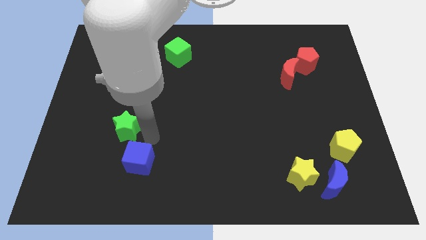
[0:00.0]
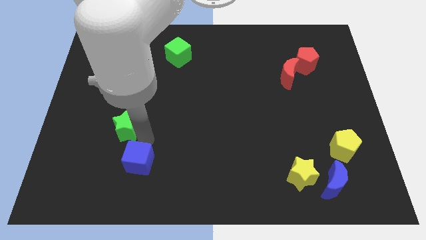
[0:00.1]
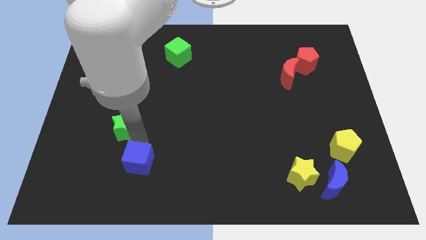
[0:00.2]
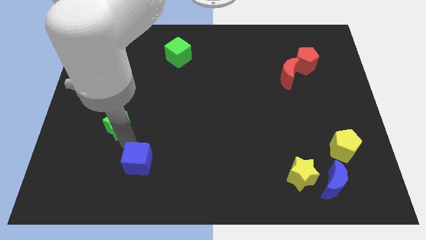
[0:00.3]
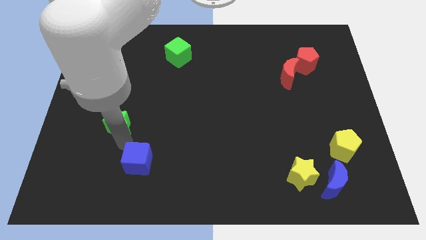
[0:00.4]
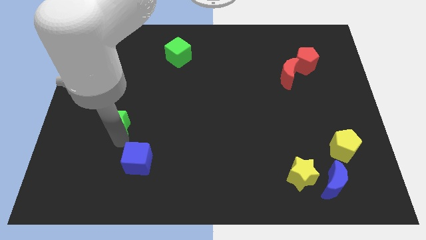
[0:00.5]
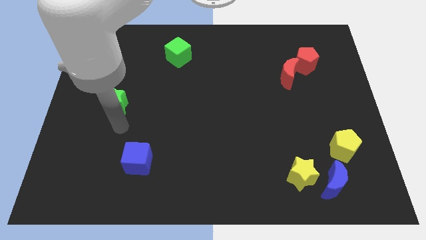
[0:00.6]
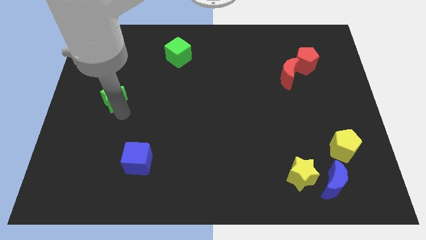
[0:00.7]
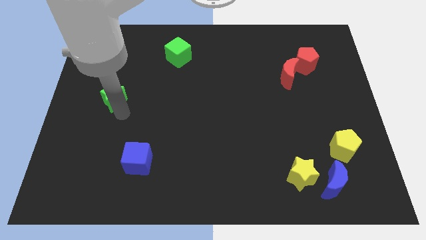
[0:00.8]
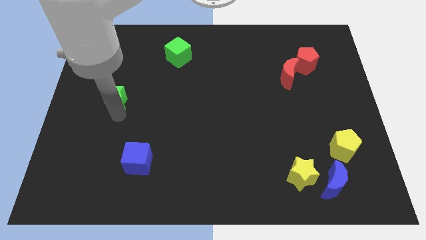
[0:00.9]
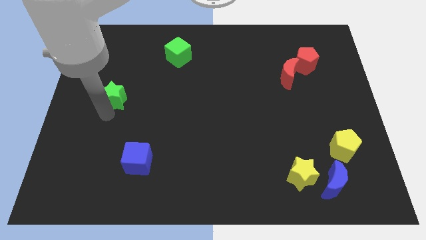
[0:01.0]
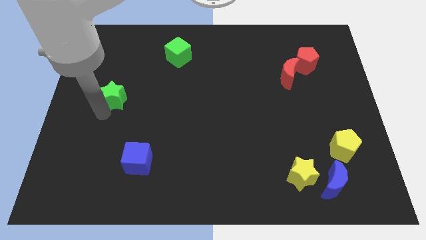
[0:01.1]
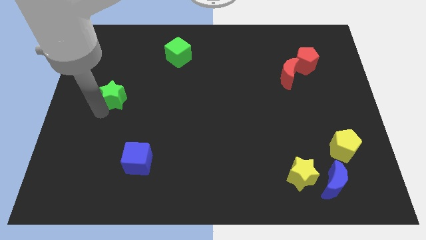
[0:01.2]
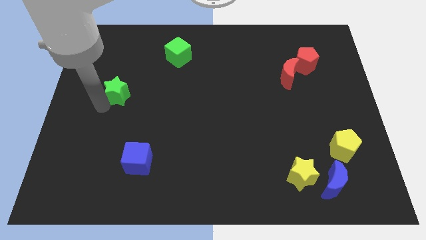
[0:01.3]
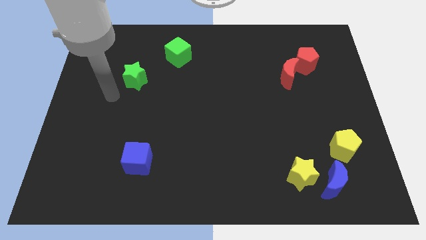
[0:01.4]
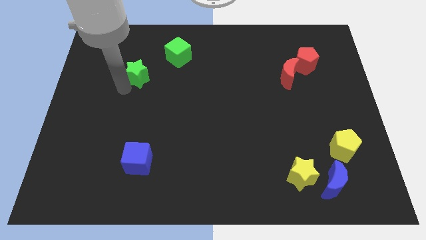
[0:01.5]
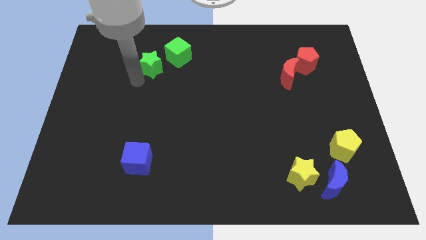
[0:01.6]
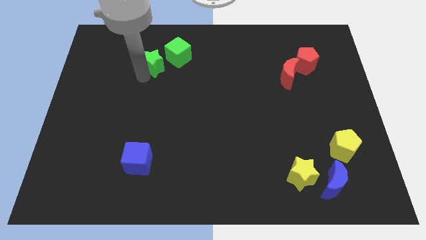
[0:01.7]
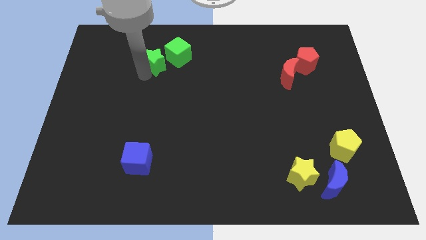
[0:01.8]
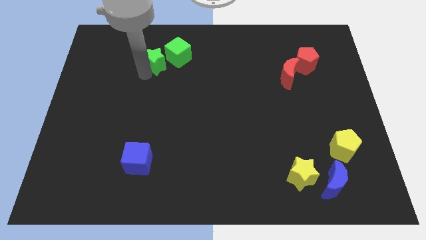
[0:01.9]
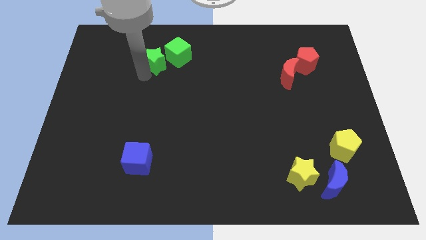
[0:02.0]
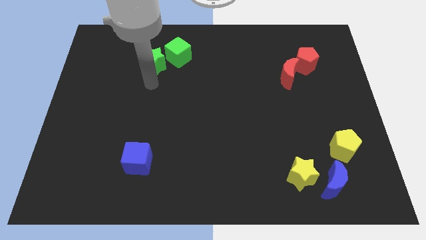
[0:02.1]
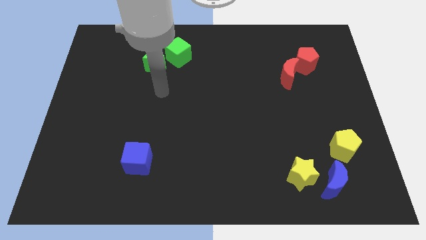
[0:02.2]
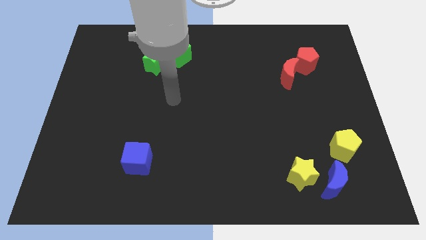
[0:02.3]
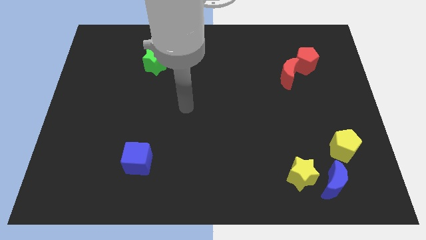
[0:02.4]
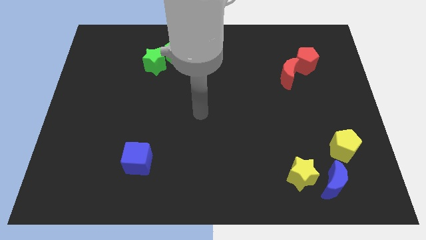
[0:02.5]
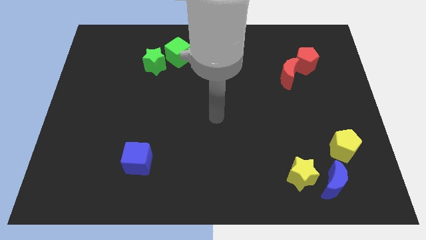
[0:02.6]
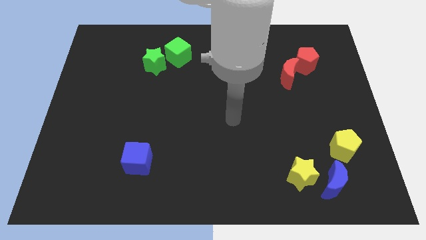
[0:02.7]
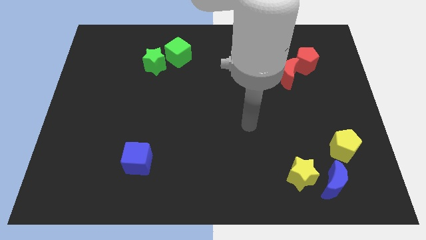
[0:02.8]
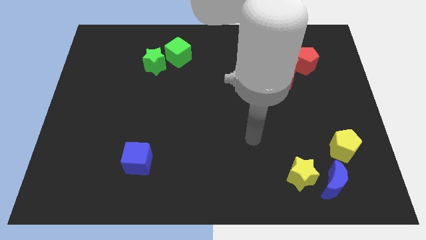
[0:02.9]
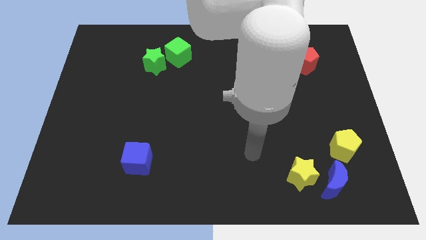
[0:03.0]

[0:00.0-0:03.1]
push the green star to the left of the green cube

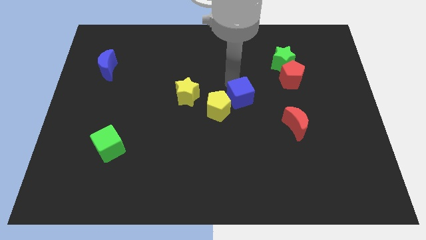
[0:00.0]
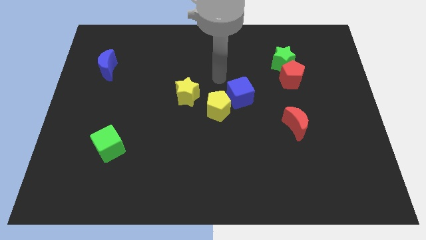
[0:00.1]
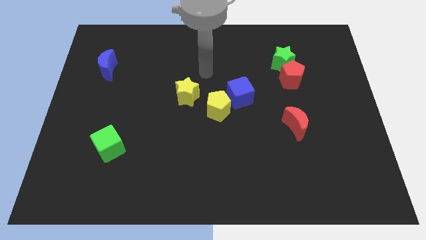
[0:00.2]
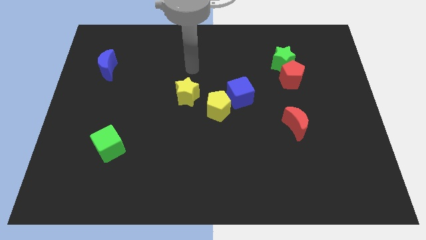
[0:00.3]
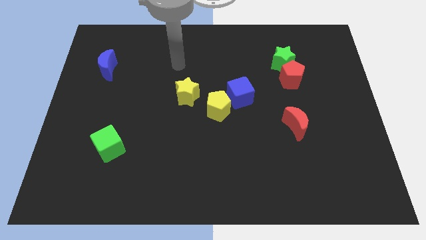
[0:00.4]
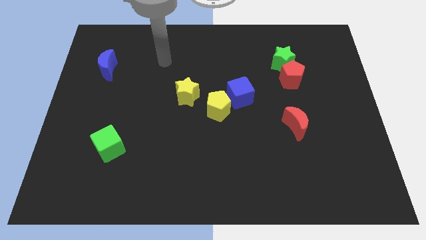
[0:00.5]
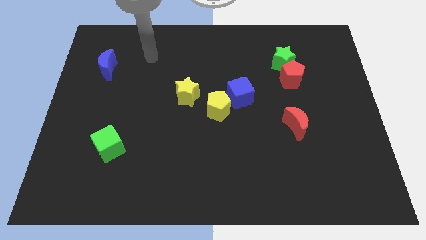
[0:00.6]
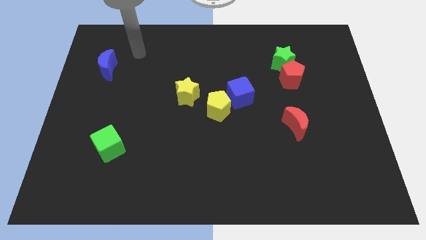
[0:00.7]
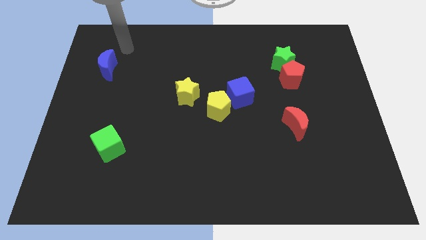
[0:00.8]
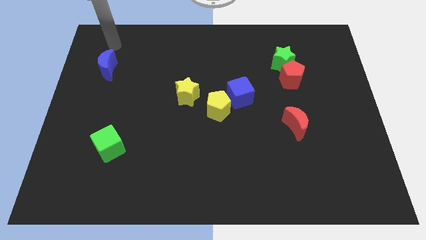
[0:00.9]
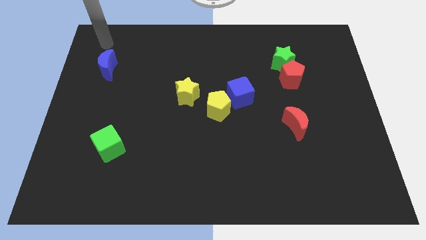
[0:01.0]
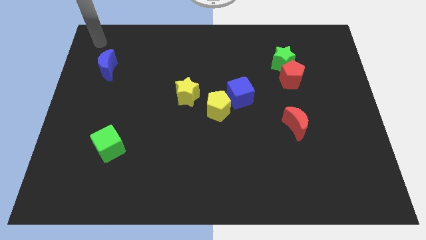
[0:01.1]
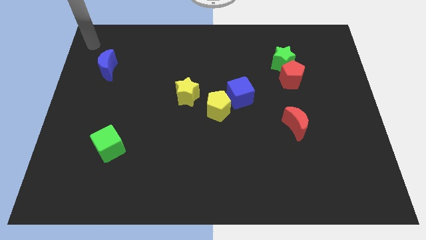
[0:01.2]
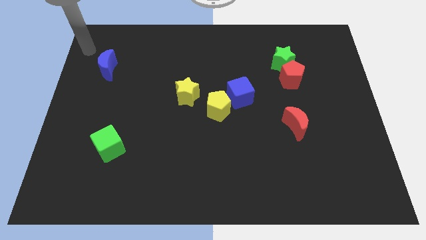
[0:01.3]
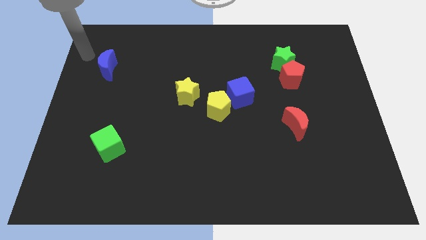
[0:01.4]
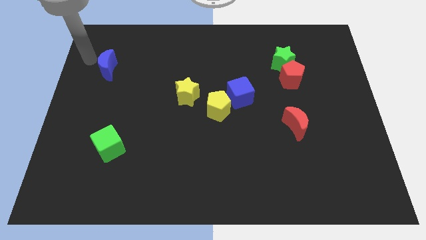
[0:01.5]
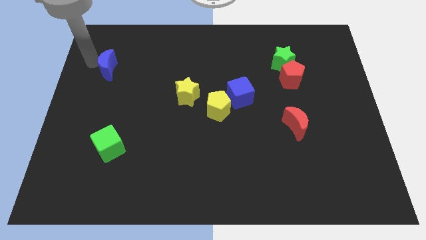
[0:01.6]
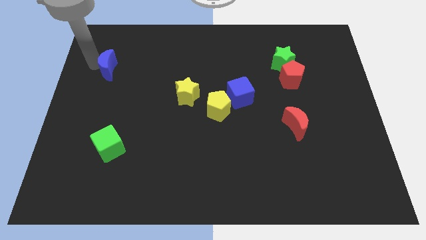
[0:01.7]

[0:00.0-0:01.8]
place the arm left to the blue moon

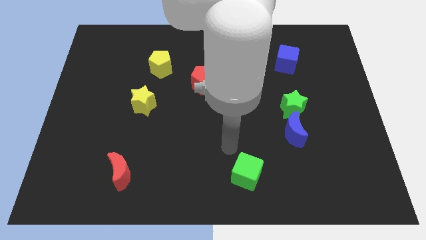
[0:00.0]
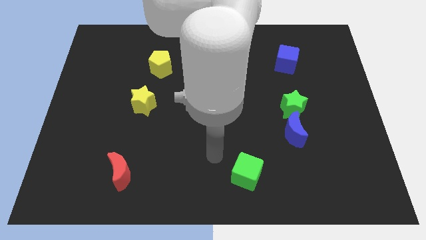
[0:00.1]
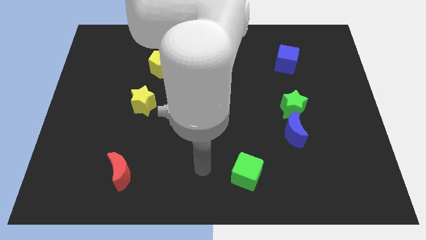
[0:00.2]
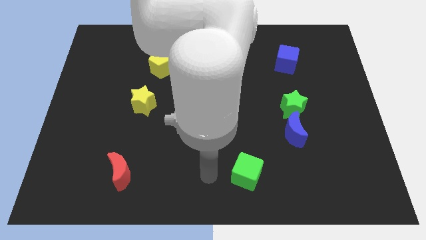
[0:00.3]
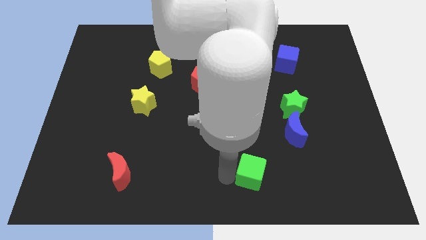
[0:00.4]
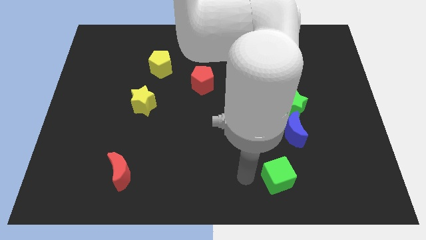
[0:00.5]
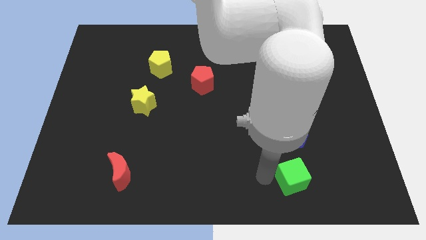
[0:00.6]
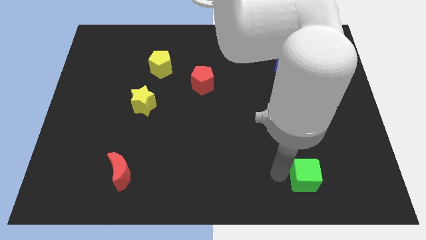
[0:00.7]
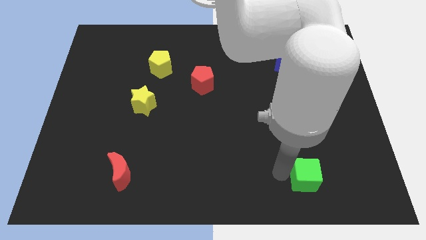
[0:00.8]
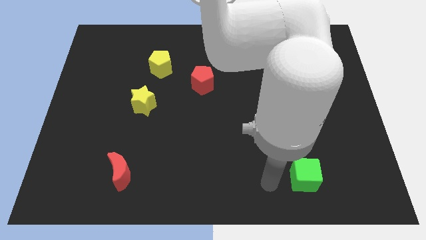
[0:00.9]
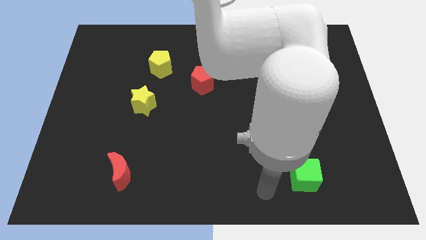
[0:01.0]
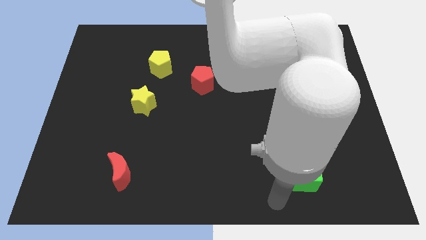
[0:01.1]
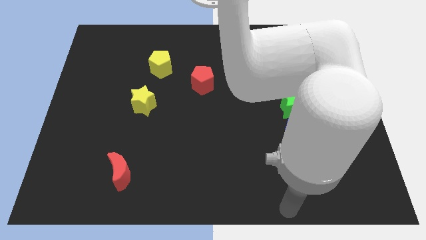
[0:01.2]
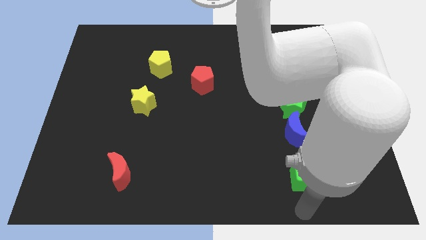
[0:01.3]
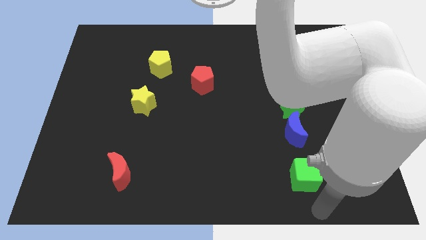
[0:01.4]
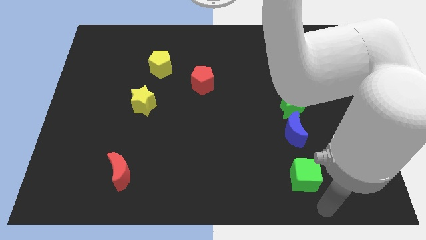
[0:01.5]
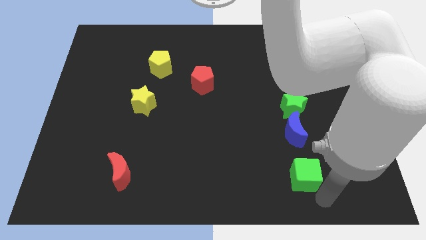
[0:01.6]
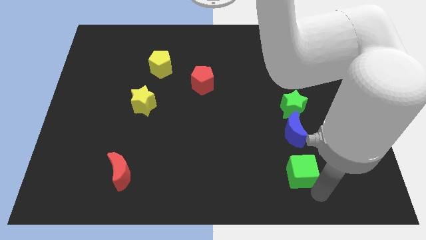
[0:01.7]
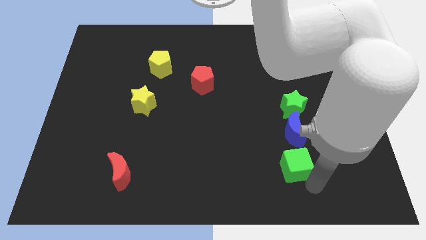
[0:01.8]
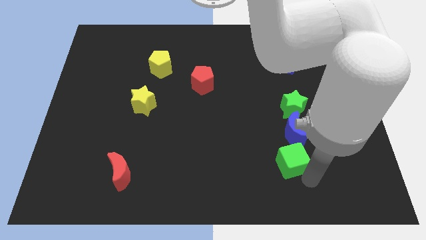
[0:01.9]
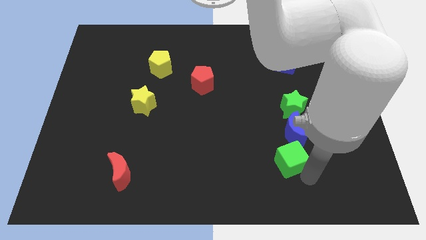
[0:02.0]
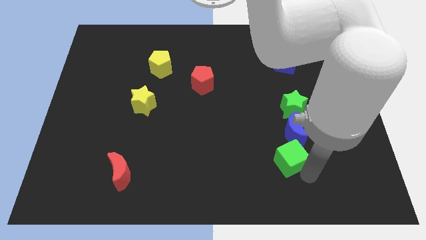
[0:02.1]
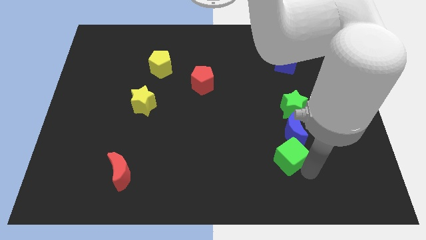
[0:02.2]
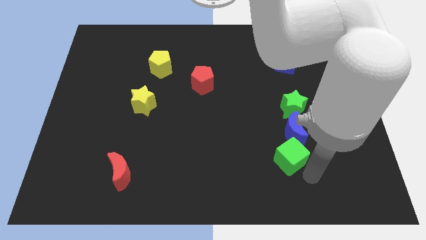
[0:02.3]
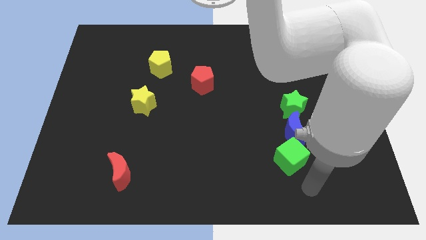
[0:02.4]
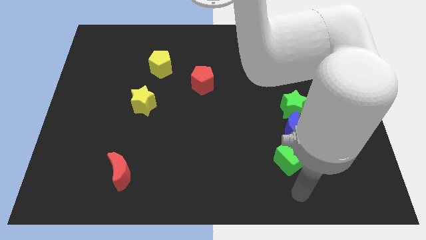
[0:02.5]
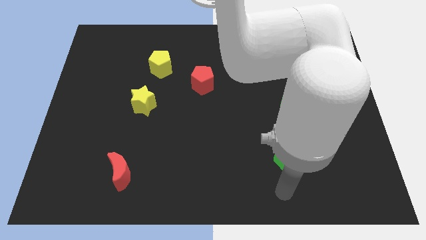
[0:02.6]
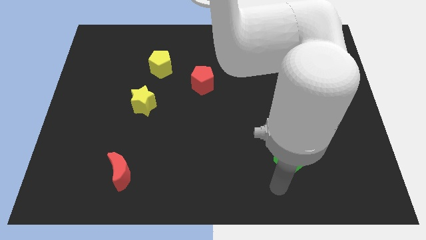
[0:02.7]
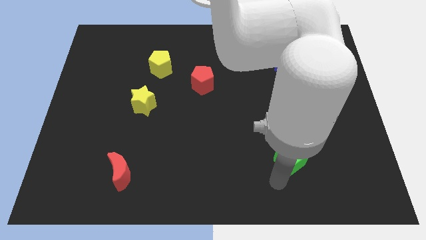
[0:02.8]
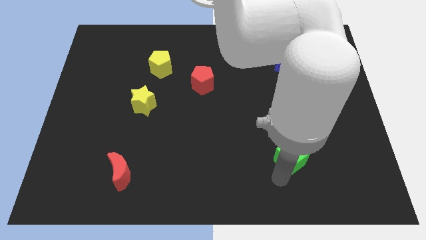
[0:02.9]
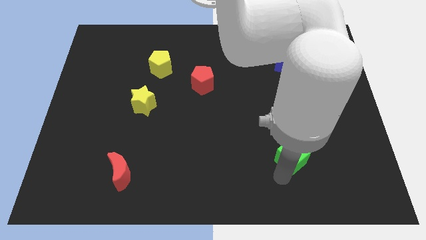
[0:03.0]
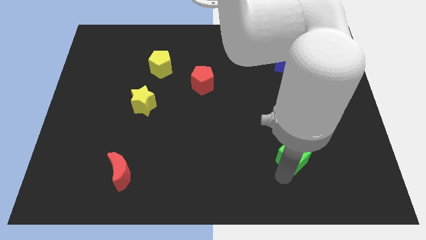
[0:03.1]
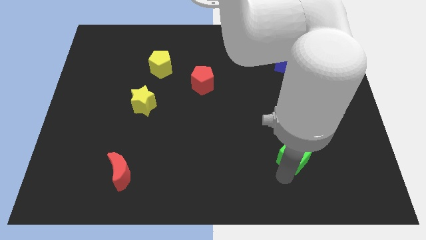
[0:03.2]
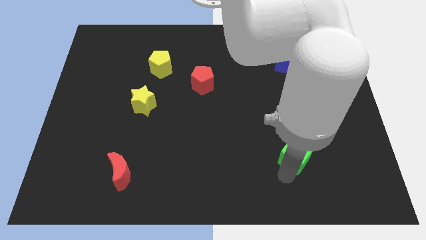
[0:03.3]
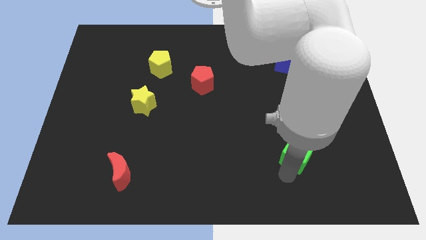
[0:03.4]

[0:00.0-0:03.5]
push green cube into blue crescent

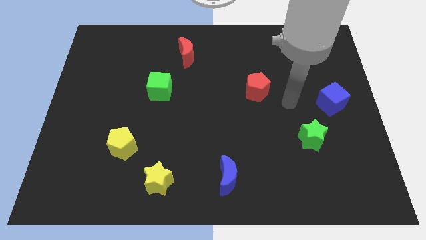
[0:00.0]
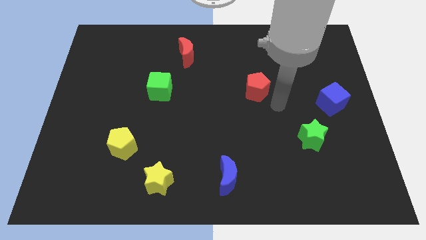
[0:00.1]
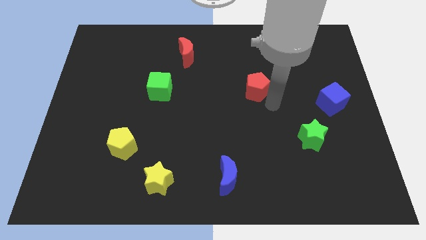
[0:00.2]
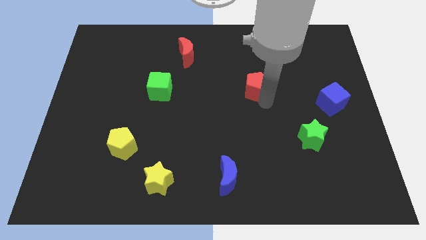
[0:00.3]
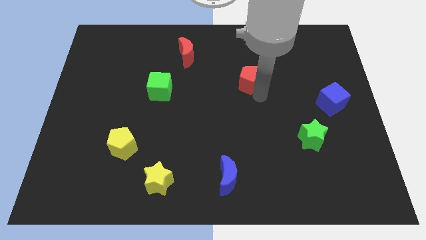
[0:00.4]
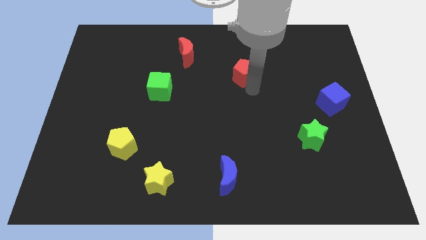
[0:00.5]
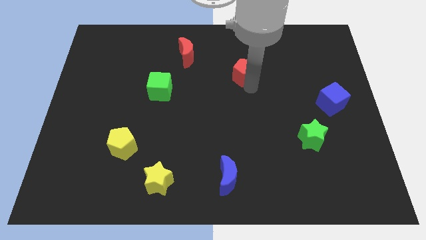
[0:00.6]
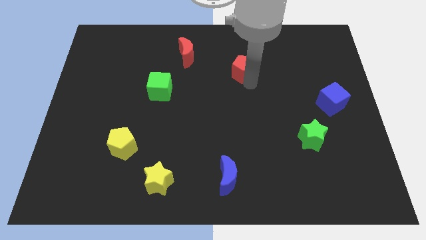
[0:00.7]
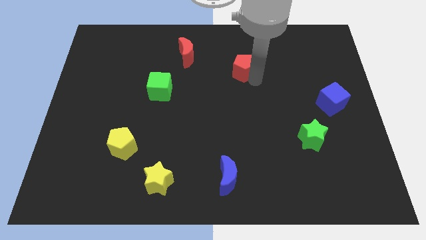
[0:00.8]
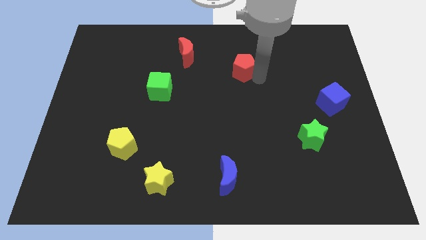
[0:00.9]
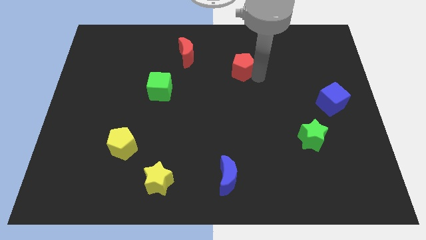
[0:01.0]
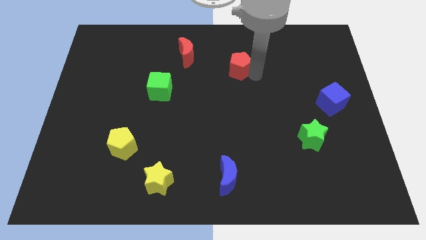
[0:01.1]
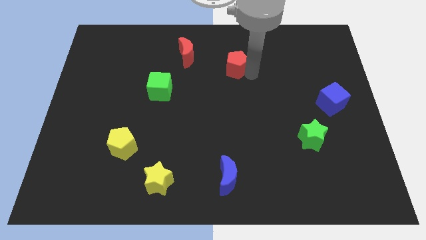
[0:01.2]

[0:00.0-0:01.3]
push the red pentagon to the left of the board
